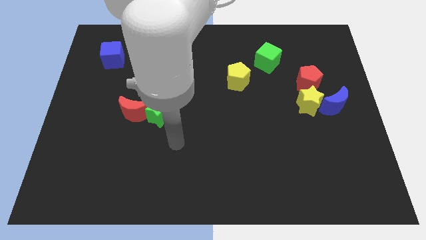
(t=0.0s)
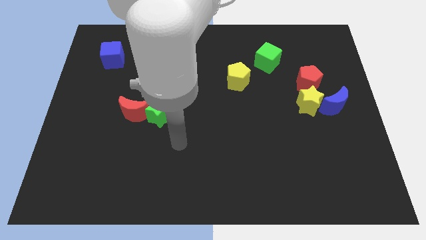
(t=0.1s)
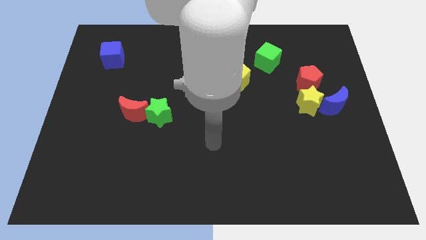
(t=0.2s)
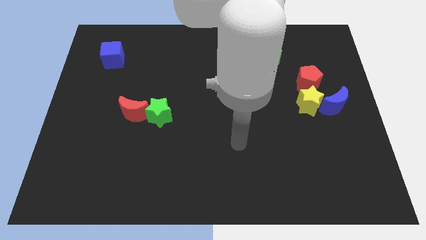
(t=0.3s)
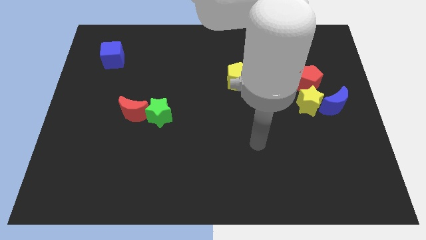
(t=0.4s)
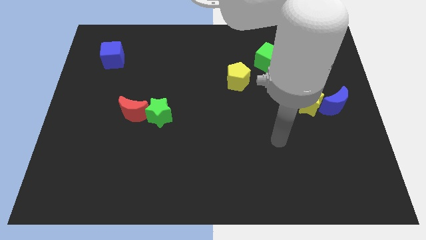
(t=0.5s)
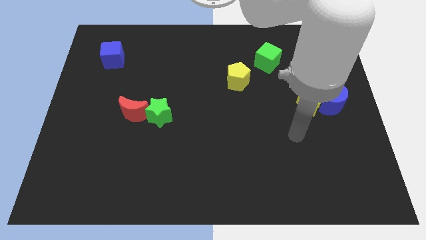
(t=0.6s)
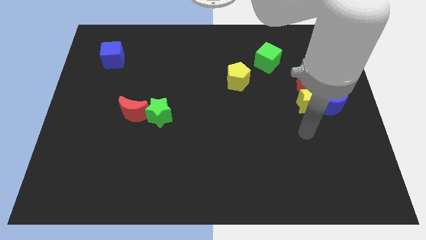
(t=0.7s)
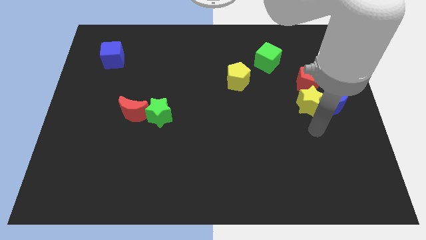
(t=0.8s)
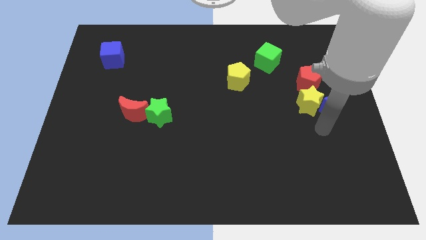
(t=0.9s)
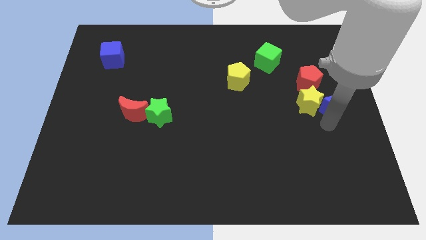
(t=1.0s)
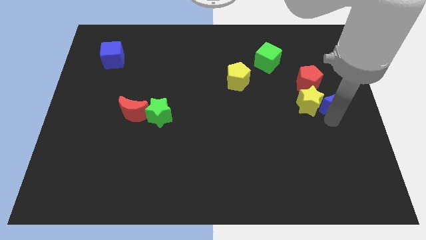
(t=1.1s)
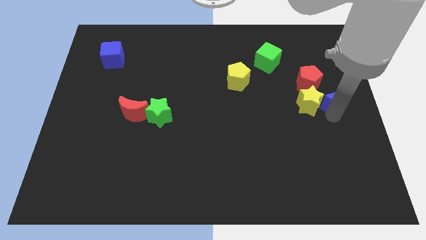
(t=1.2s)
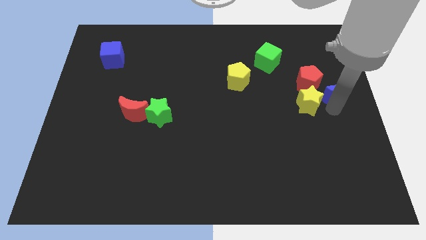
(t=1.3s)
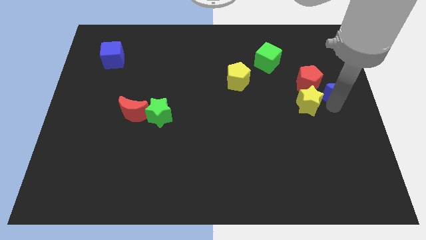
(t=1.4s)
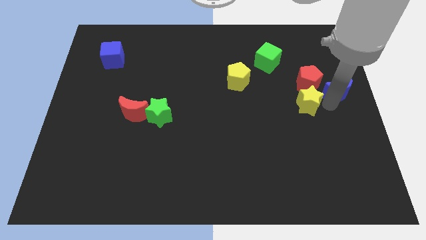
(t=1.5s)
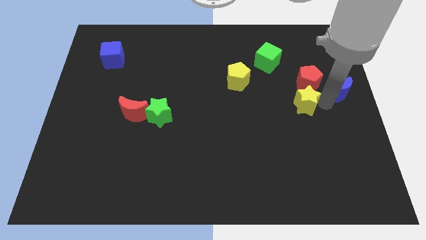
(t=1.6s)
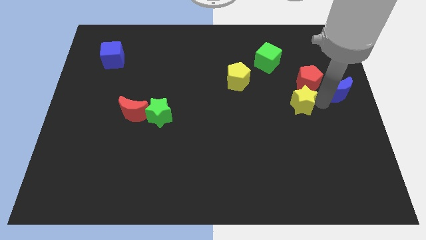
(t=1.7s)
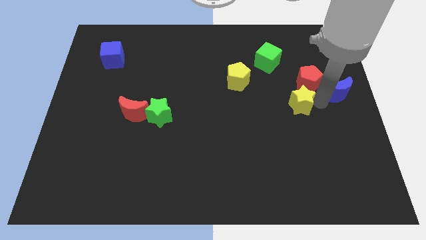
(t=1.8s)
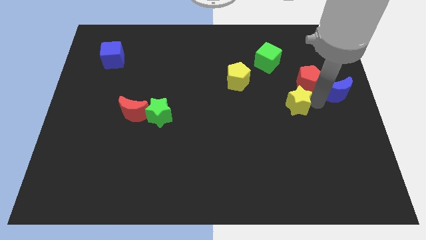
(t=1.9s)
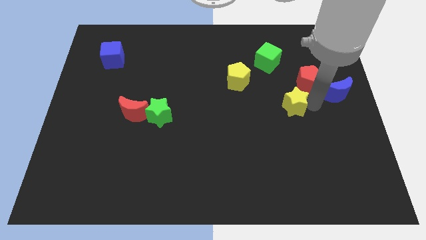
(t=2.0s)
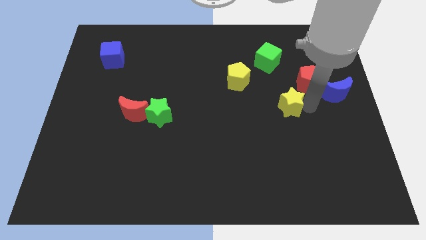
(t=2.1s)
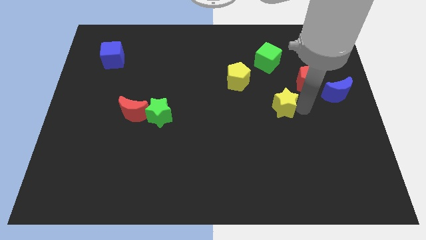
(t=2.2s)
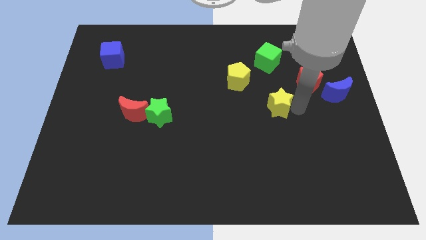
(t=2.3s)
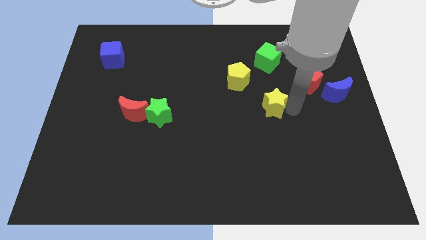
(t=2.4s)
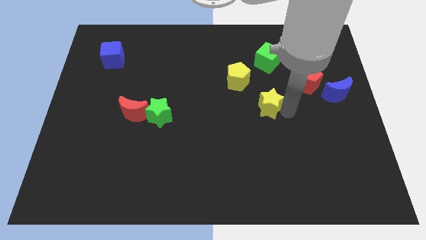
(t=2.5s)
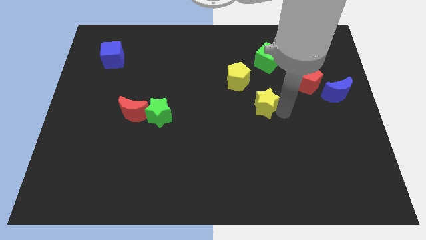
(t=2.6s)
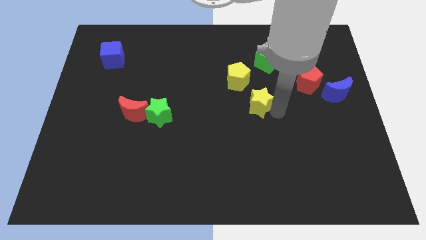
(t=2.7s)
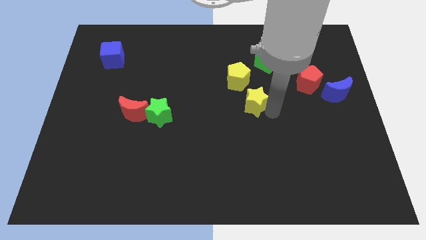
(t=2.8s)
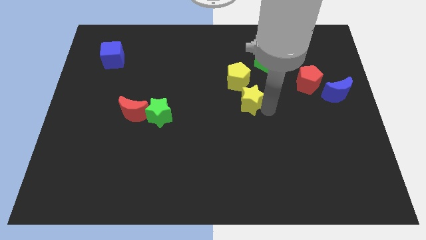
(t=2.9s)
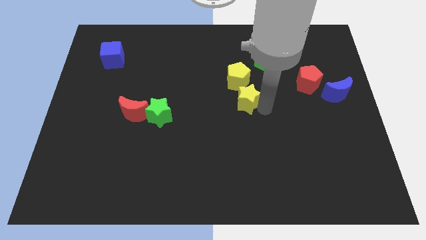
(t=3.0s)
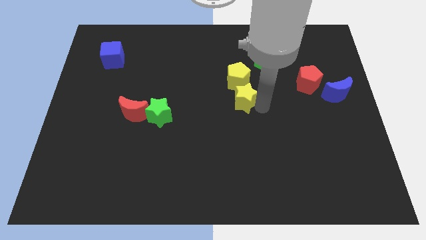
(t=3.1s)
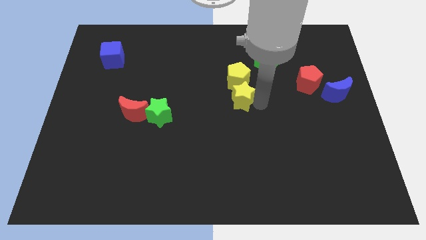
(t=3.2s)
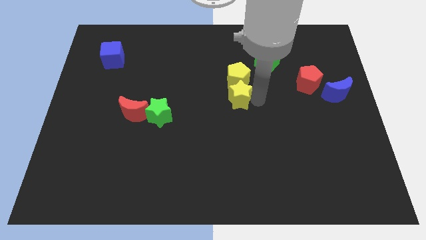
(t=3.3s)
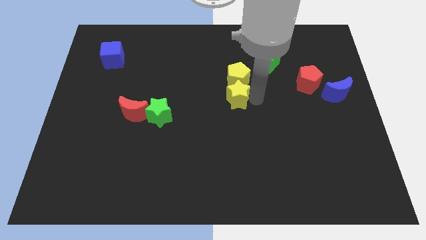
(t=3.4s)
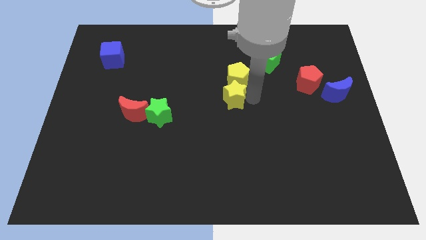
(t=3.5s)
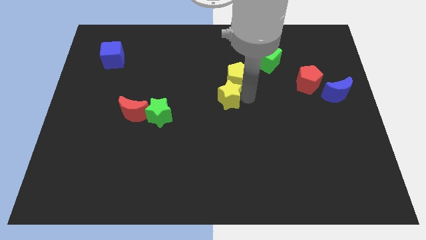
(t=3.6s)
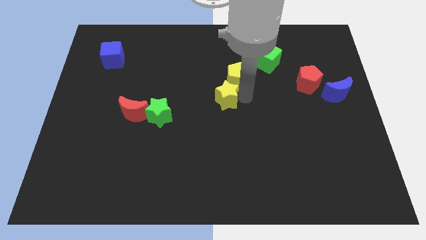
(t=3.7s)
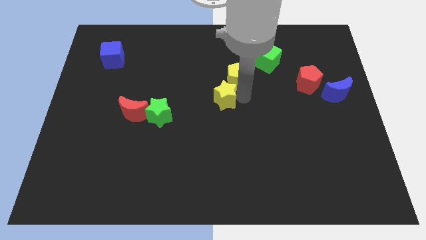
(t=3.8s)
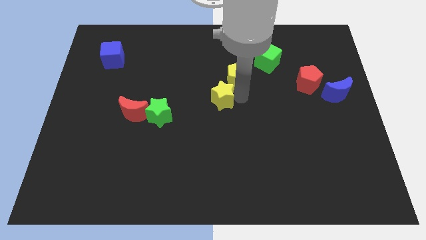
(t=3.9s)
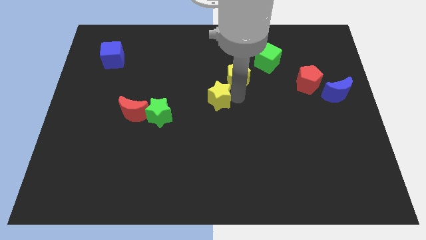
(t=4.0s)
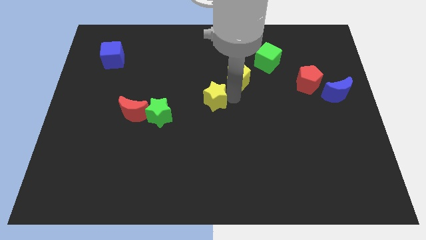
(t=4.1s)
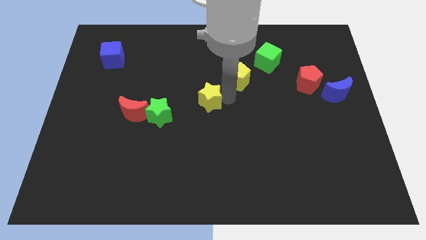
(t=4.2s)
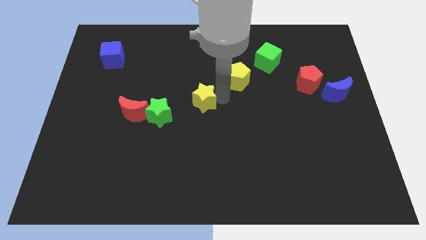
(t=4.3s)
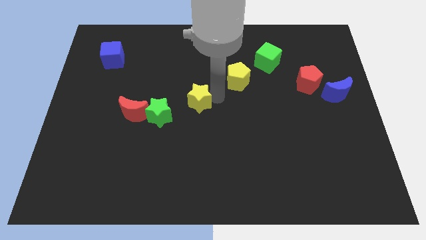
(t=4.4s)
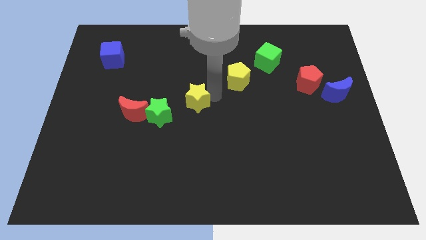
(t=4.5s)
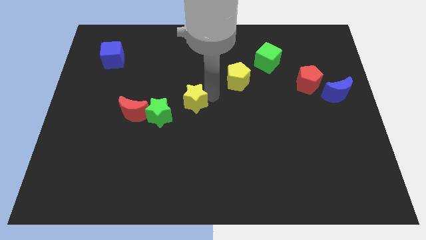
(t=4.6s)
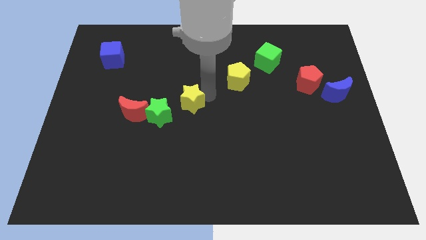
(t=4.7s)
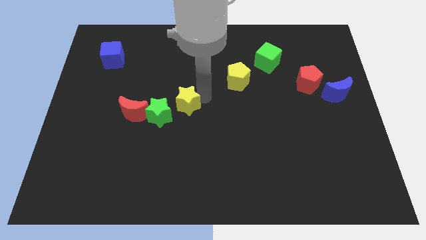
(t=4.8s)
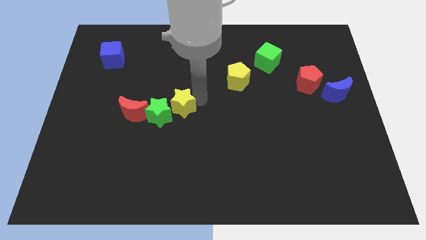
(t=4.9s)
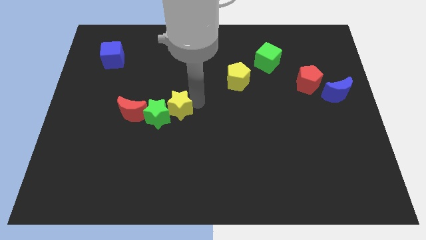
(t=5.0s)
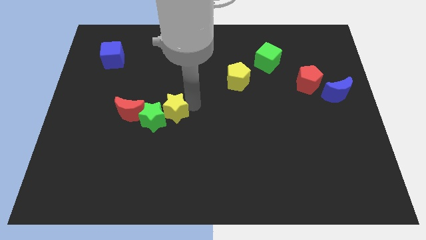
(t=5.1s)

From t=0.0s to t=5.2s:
move the yellow star next to the green star

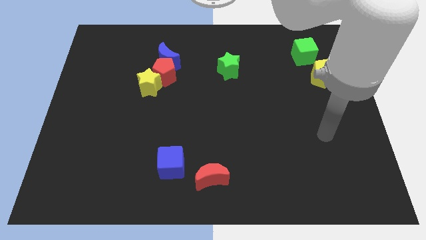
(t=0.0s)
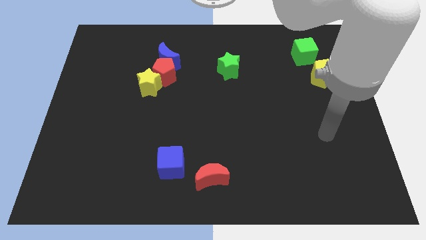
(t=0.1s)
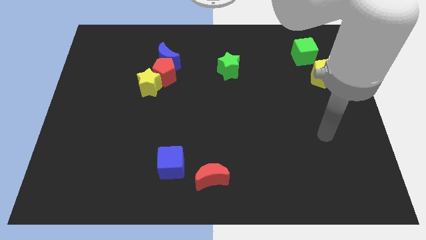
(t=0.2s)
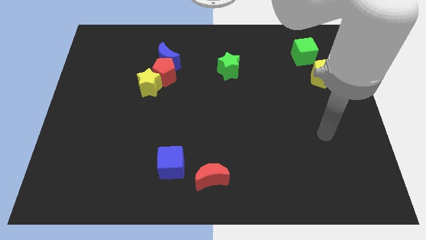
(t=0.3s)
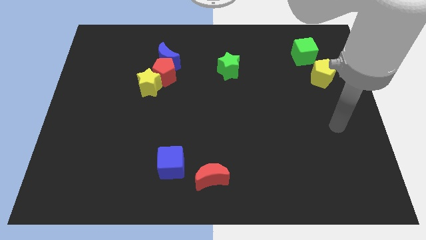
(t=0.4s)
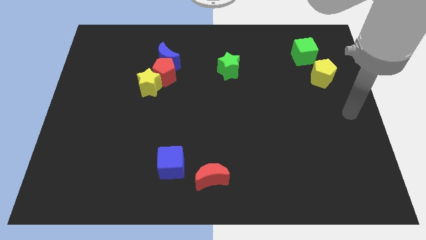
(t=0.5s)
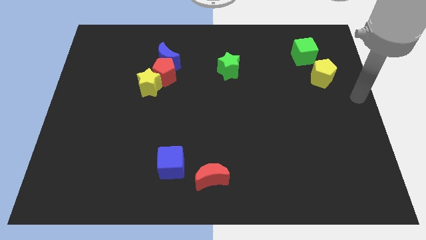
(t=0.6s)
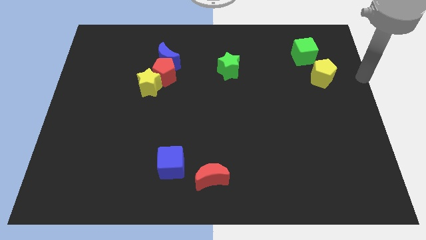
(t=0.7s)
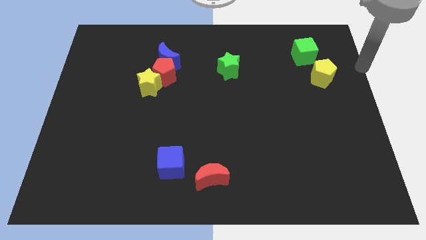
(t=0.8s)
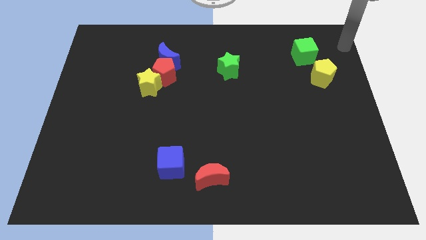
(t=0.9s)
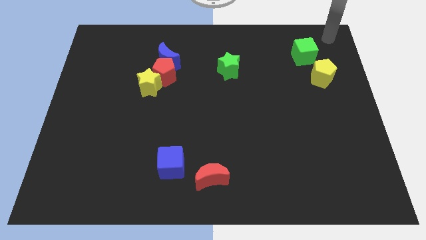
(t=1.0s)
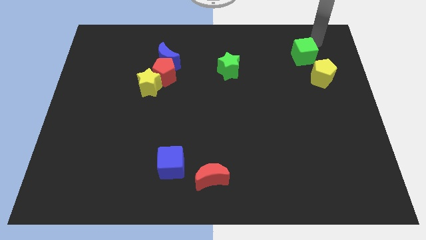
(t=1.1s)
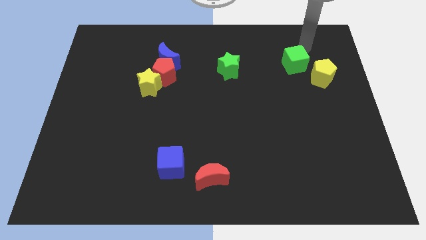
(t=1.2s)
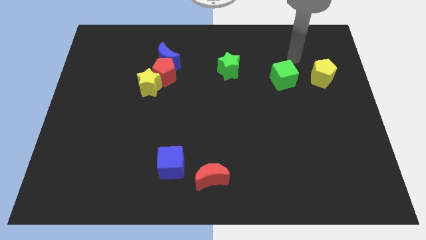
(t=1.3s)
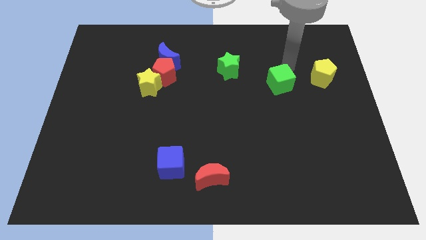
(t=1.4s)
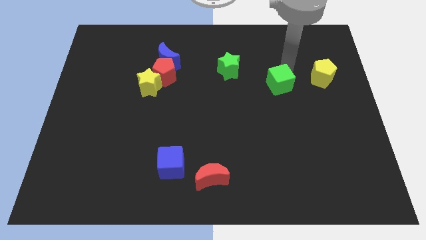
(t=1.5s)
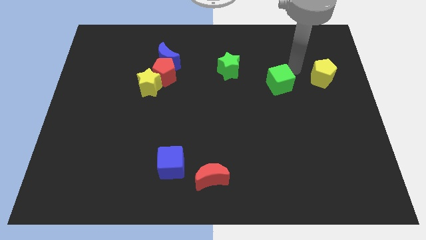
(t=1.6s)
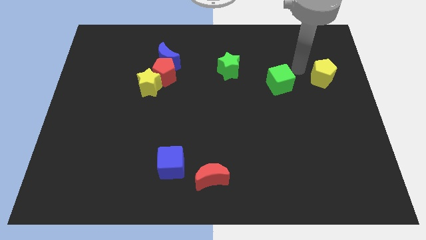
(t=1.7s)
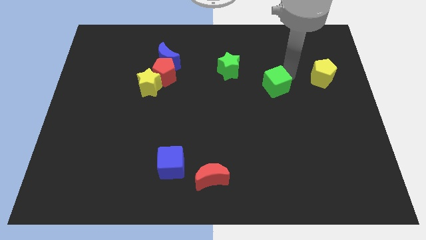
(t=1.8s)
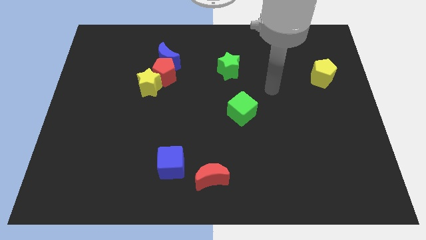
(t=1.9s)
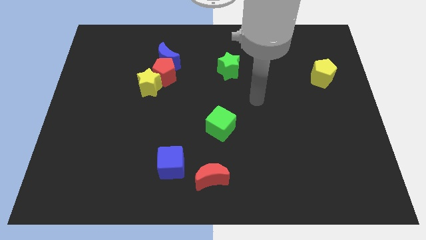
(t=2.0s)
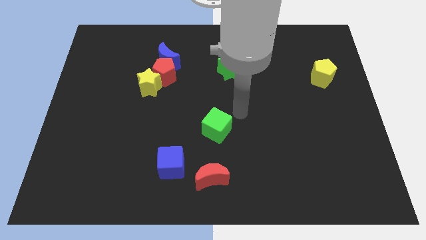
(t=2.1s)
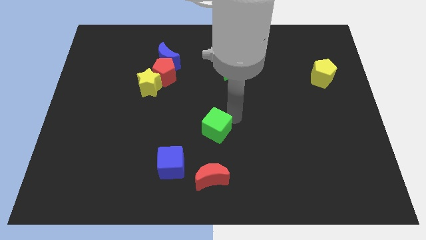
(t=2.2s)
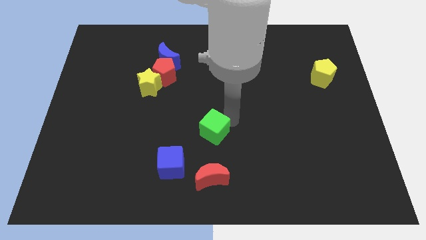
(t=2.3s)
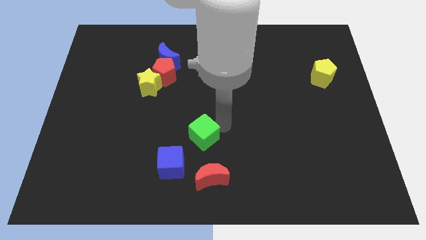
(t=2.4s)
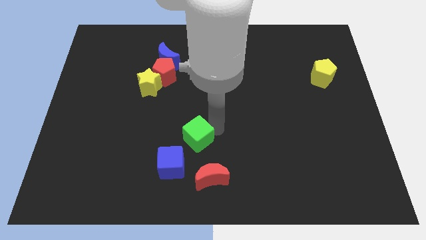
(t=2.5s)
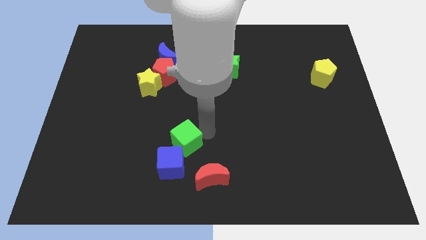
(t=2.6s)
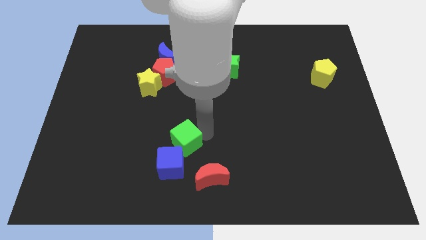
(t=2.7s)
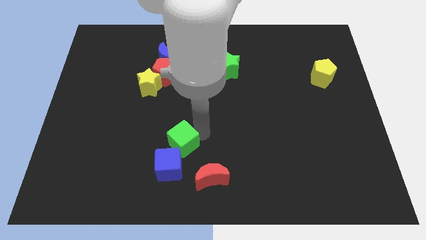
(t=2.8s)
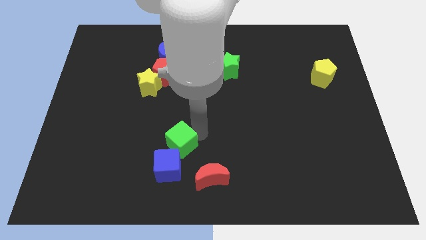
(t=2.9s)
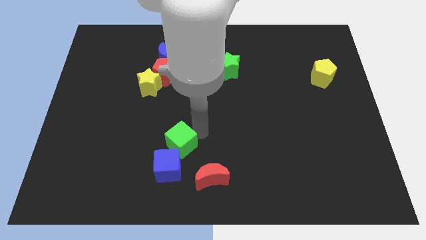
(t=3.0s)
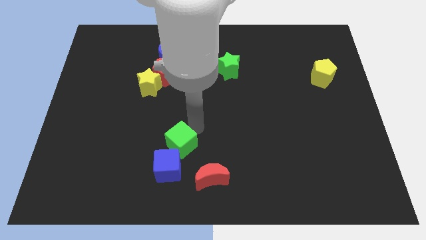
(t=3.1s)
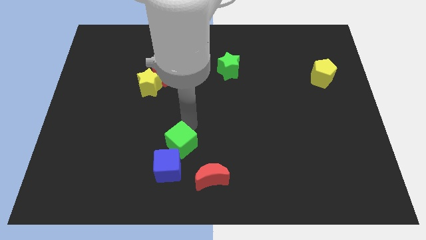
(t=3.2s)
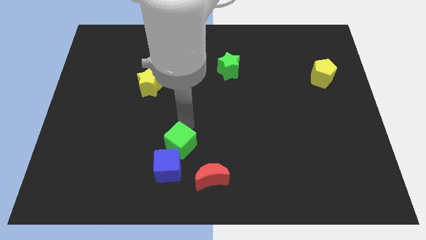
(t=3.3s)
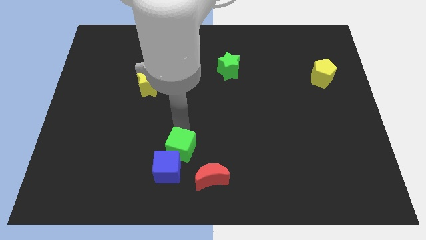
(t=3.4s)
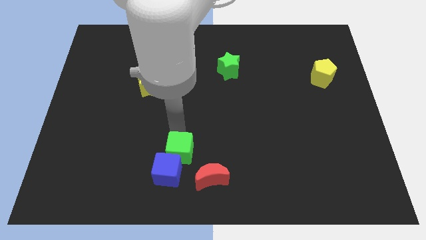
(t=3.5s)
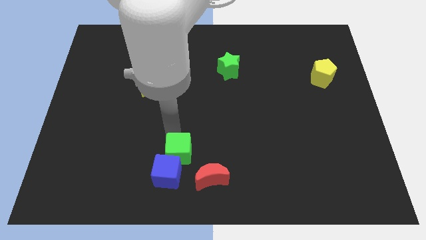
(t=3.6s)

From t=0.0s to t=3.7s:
put the green cube close to the blue cube
